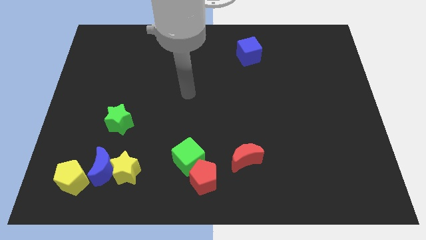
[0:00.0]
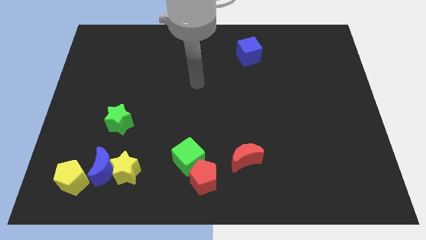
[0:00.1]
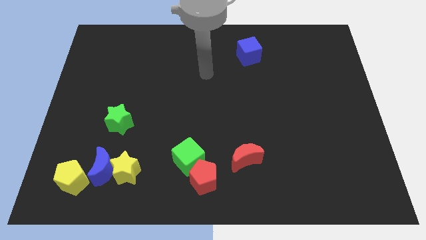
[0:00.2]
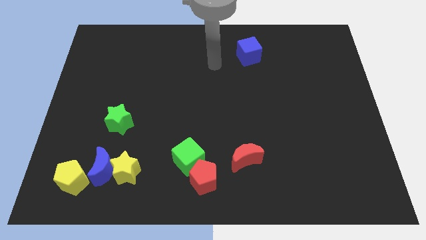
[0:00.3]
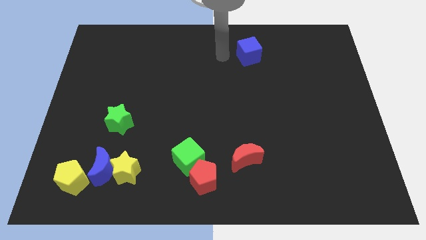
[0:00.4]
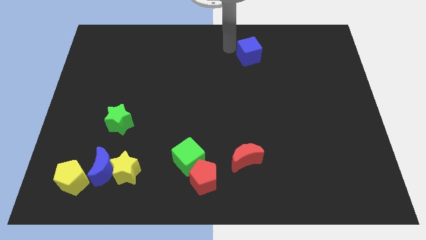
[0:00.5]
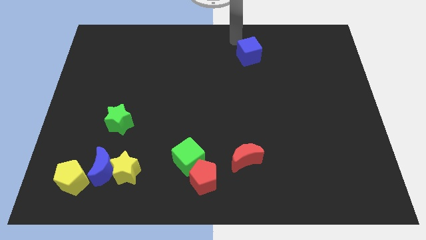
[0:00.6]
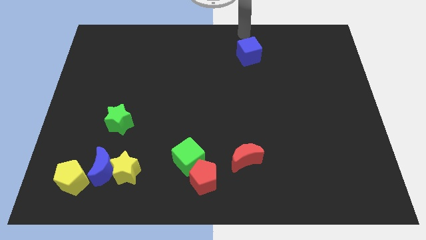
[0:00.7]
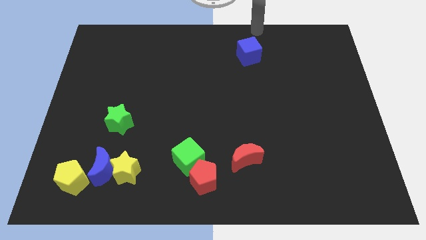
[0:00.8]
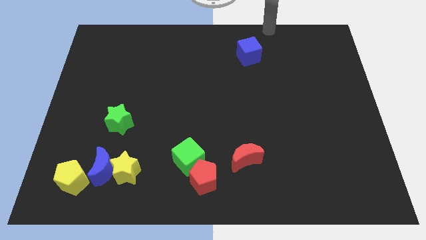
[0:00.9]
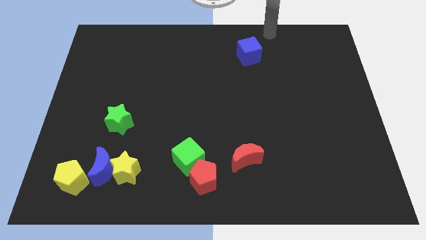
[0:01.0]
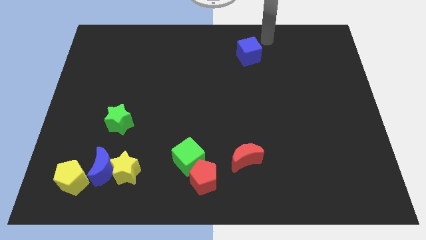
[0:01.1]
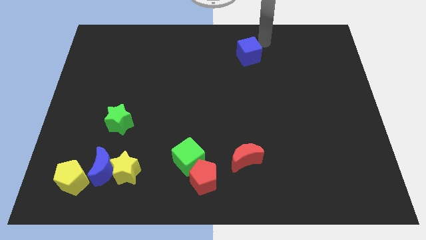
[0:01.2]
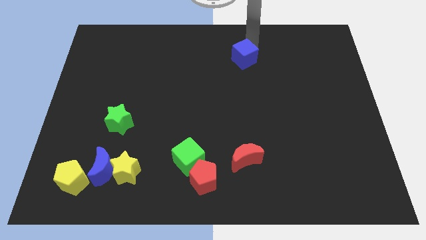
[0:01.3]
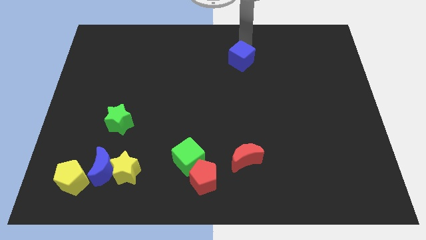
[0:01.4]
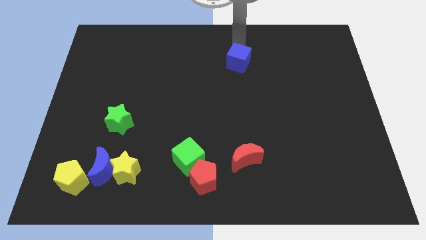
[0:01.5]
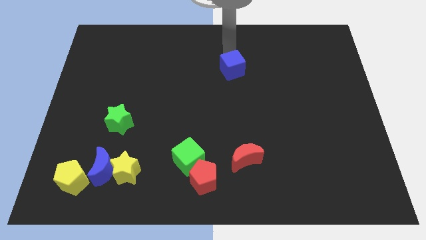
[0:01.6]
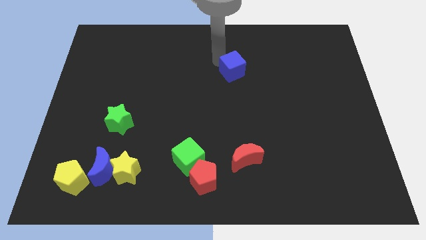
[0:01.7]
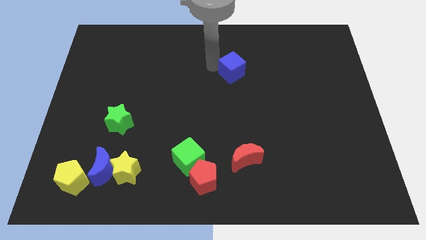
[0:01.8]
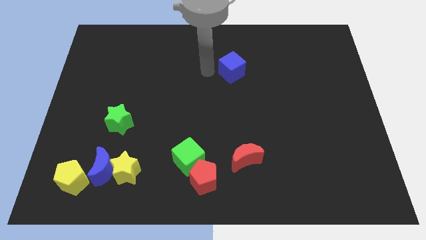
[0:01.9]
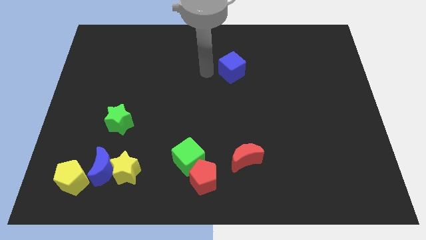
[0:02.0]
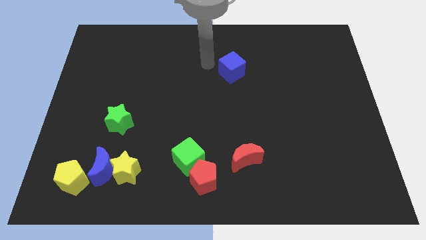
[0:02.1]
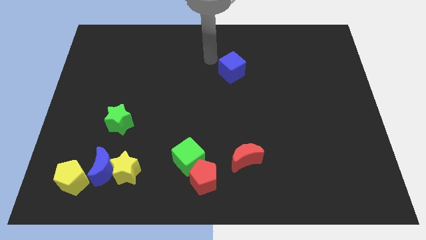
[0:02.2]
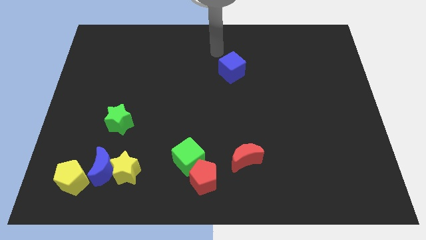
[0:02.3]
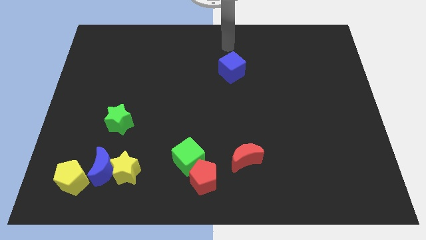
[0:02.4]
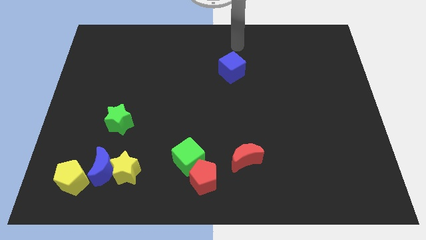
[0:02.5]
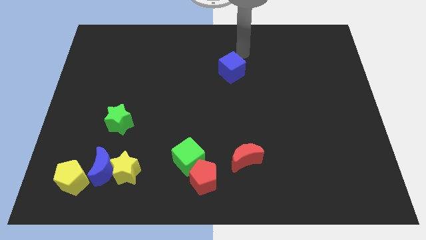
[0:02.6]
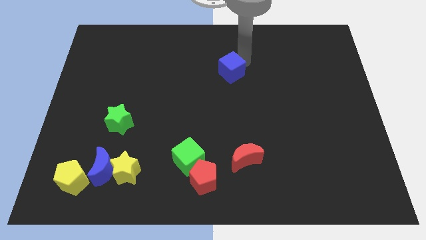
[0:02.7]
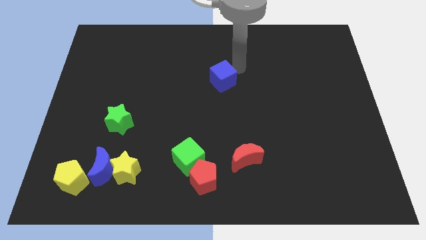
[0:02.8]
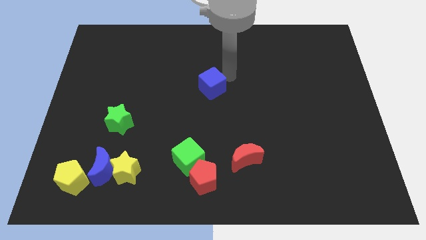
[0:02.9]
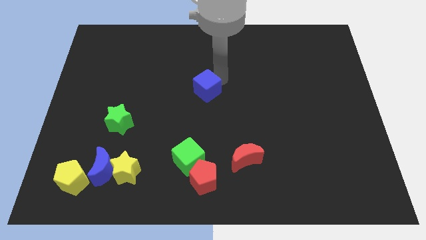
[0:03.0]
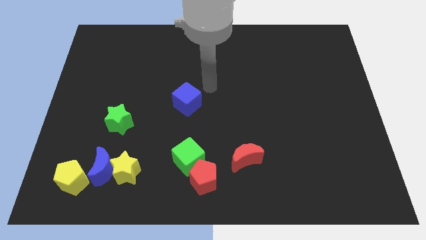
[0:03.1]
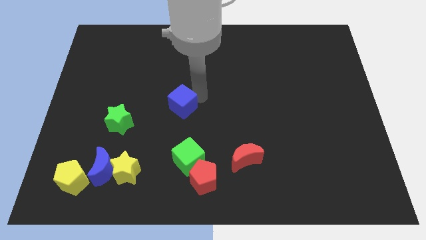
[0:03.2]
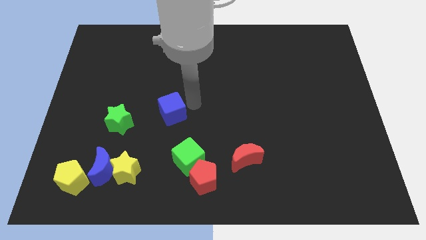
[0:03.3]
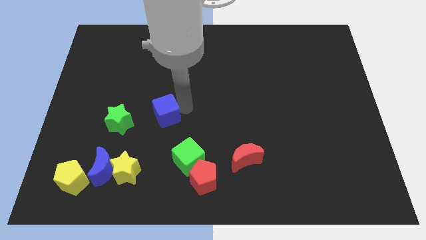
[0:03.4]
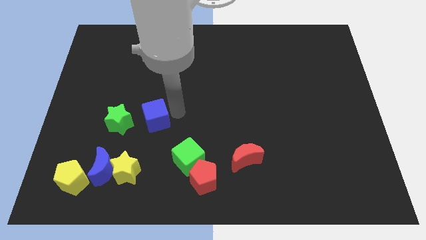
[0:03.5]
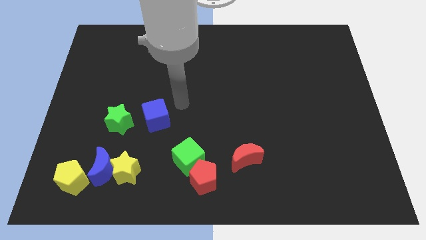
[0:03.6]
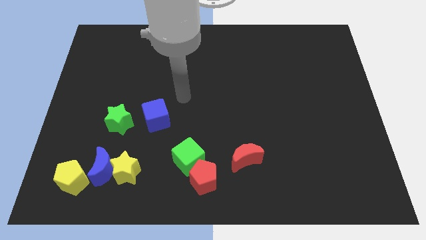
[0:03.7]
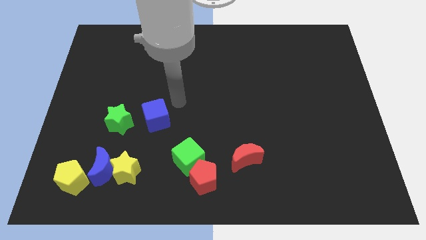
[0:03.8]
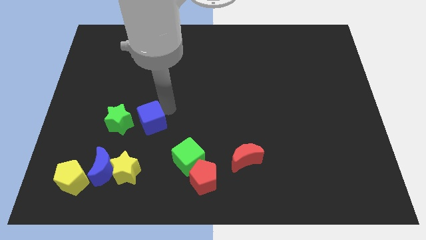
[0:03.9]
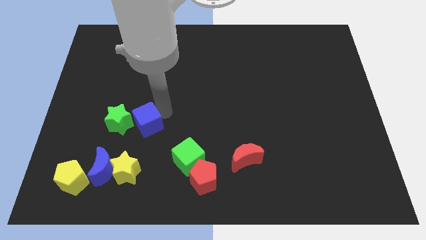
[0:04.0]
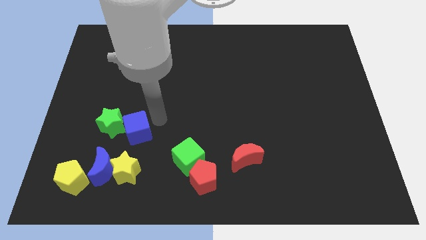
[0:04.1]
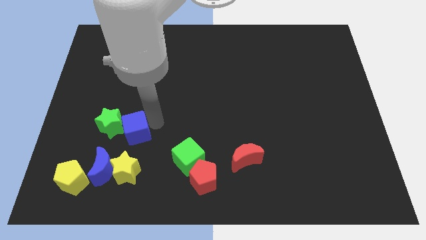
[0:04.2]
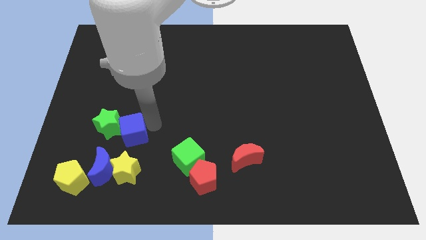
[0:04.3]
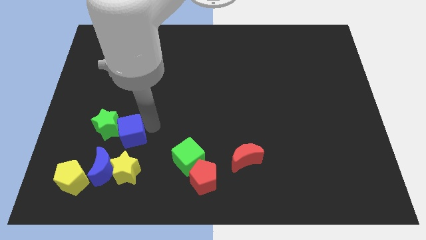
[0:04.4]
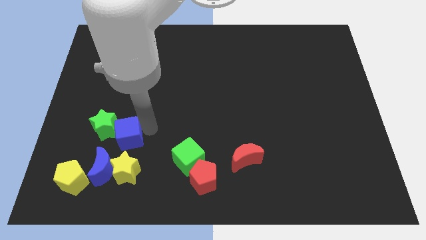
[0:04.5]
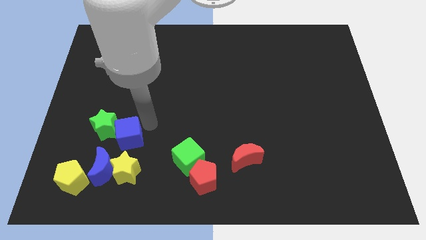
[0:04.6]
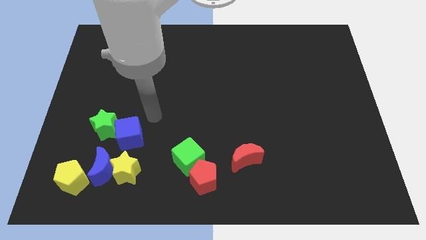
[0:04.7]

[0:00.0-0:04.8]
push the blue cube into the green star

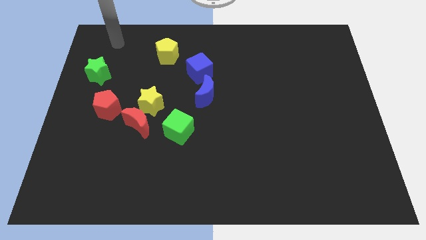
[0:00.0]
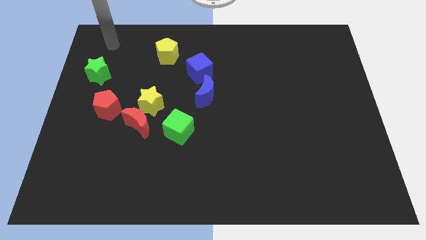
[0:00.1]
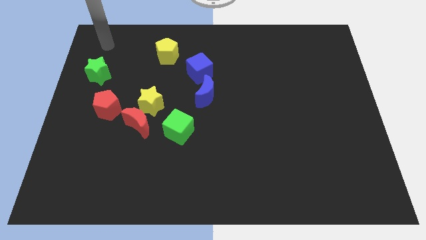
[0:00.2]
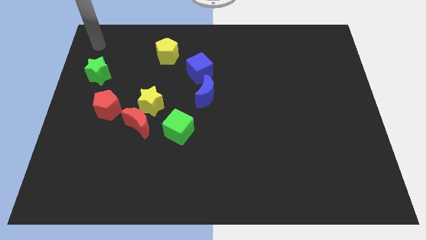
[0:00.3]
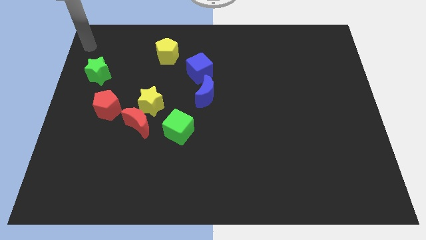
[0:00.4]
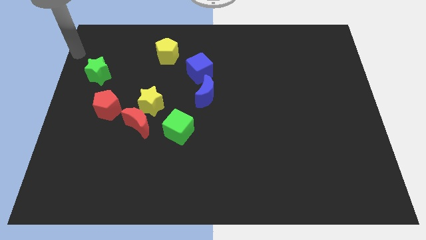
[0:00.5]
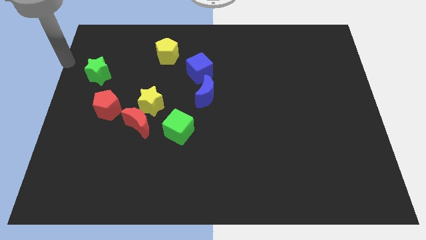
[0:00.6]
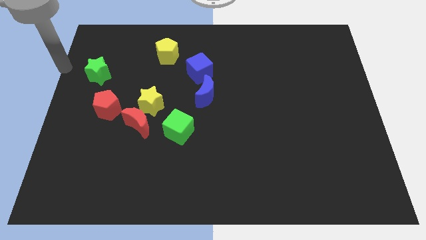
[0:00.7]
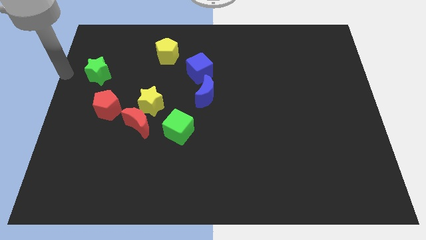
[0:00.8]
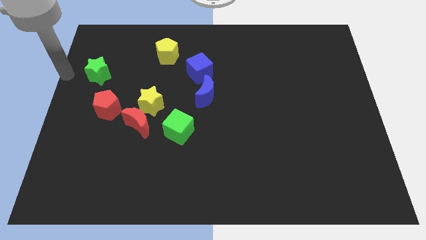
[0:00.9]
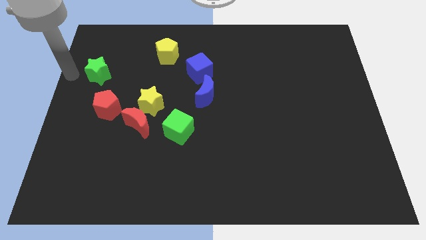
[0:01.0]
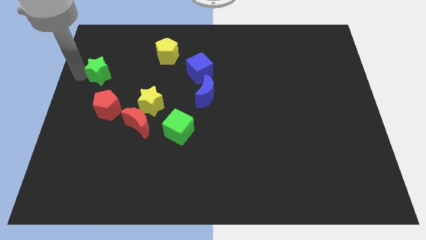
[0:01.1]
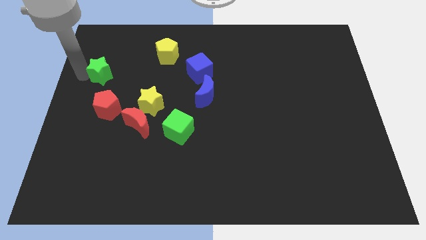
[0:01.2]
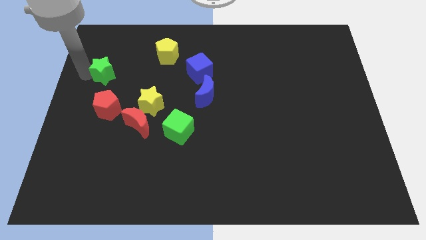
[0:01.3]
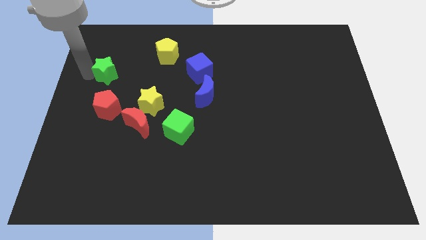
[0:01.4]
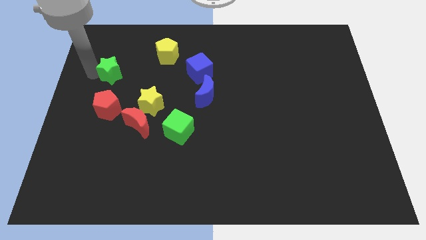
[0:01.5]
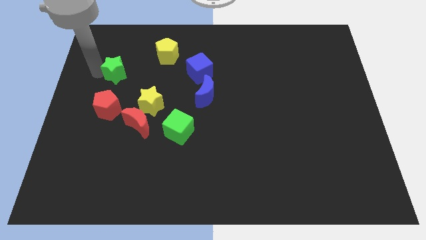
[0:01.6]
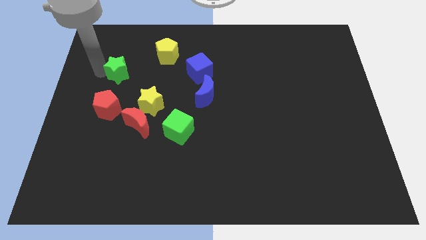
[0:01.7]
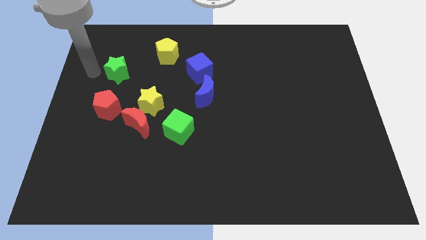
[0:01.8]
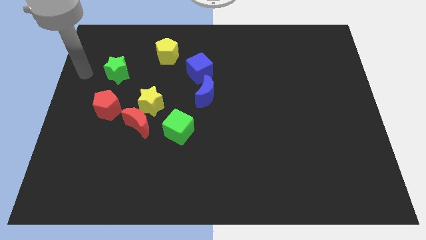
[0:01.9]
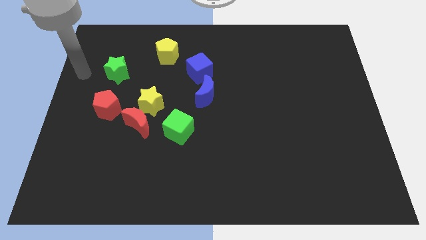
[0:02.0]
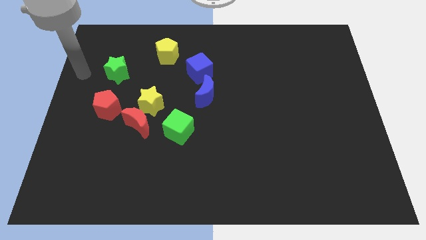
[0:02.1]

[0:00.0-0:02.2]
slide green star above the red pentagon

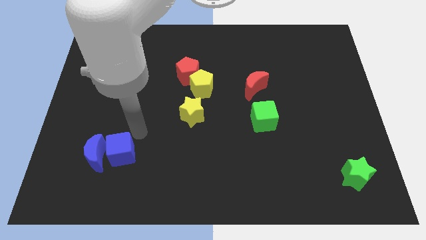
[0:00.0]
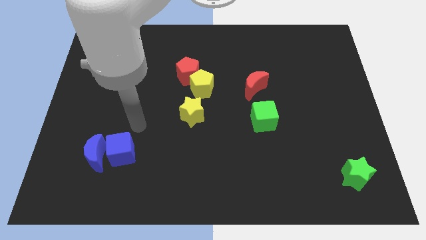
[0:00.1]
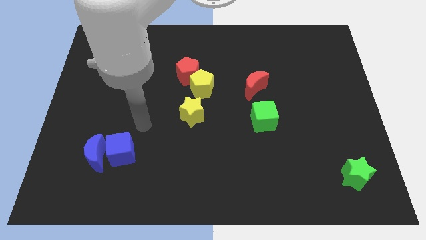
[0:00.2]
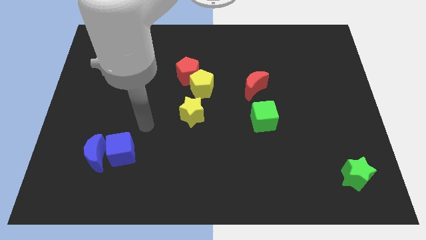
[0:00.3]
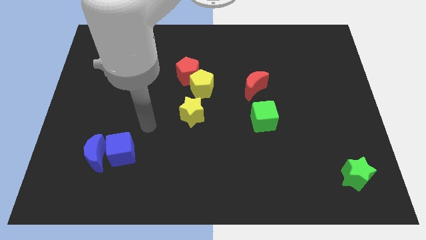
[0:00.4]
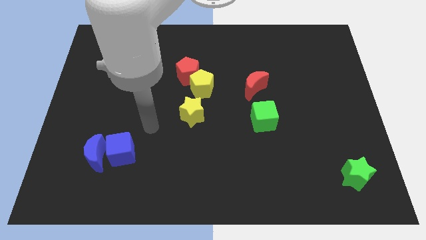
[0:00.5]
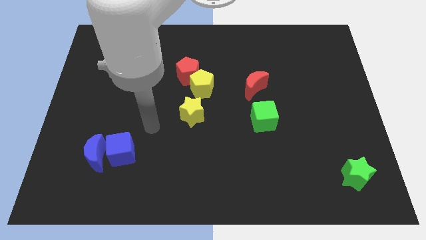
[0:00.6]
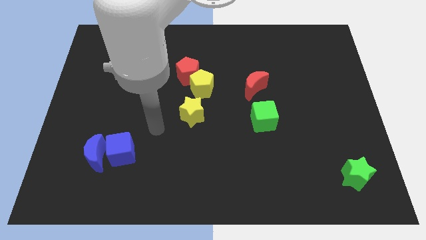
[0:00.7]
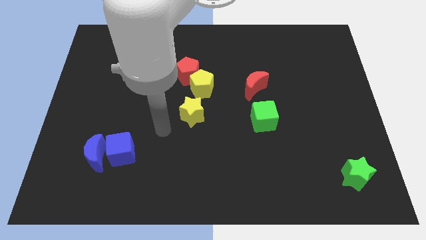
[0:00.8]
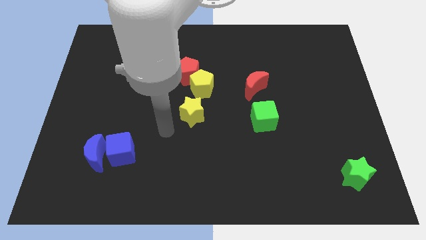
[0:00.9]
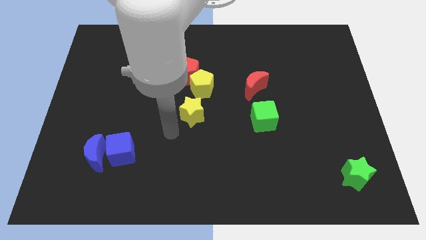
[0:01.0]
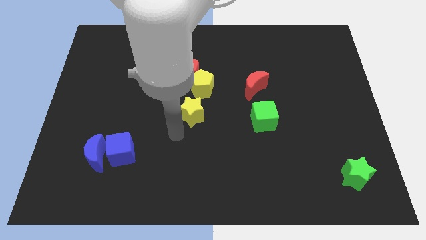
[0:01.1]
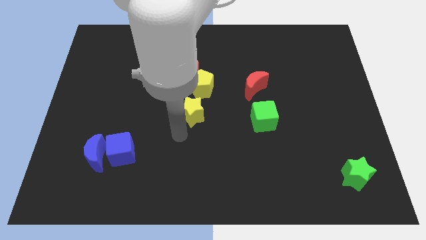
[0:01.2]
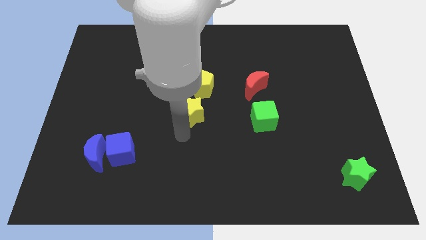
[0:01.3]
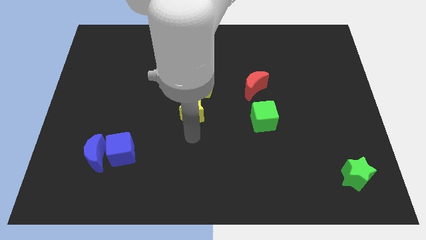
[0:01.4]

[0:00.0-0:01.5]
place your arm to the bottom of the yellow star

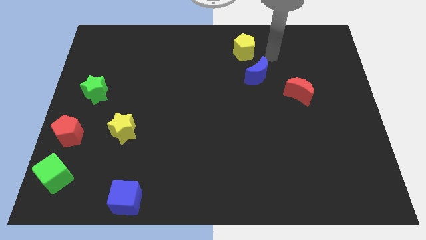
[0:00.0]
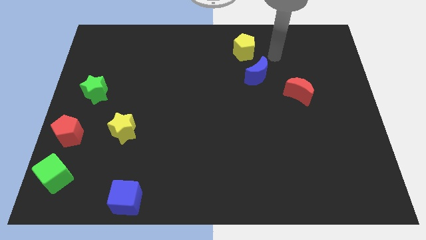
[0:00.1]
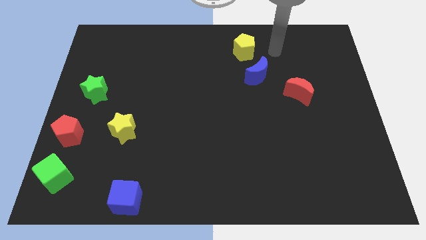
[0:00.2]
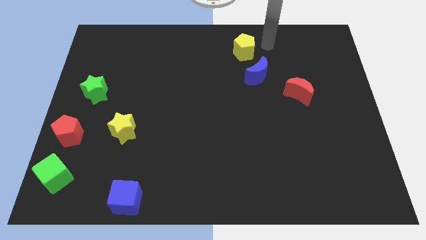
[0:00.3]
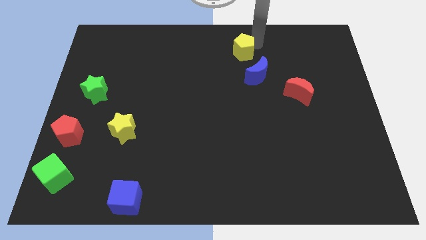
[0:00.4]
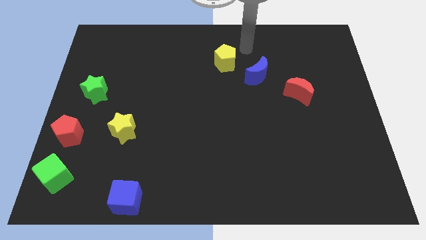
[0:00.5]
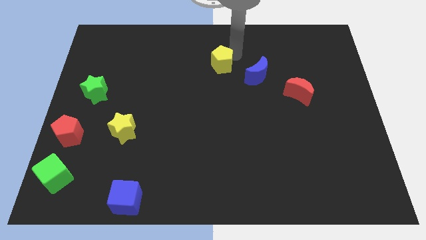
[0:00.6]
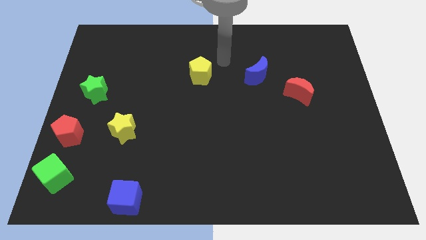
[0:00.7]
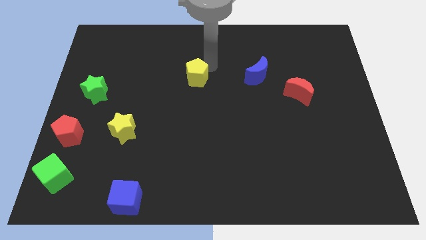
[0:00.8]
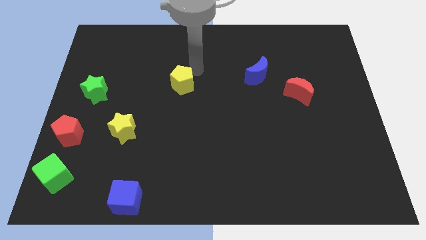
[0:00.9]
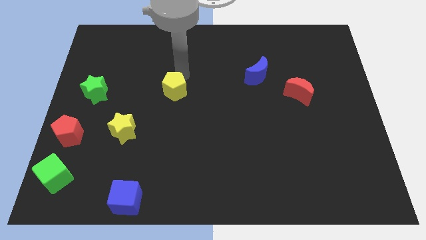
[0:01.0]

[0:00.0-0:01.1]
move the yellow pentagon to the right of the green star
